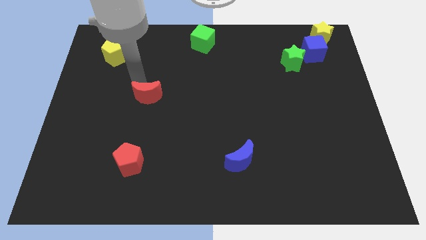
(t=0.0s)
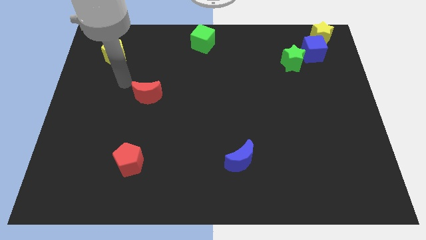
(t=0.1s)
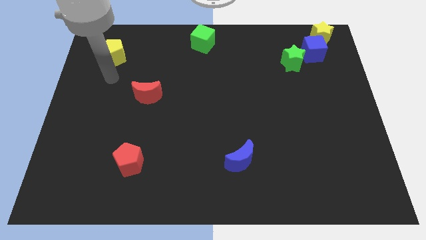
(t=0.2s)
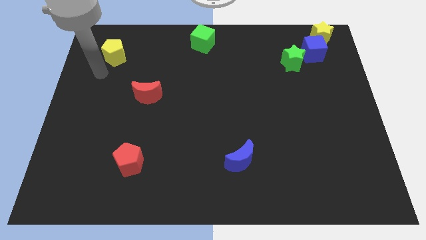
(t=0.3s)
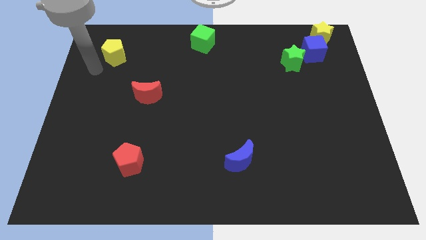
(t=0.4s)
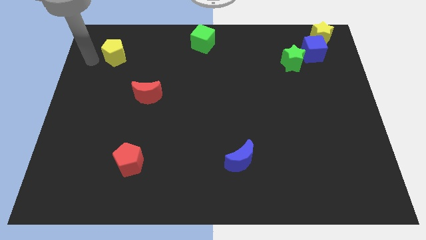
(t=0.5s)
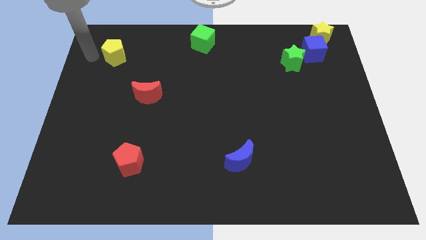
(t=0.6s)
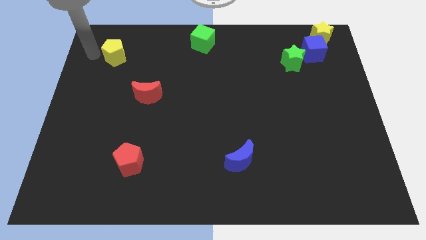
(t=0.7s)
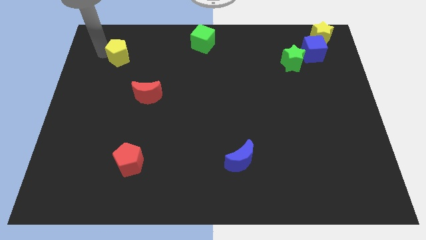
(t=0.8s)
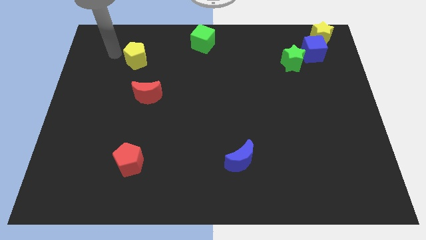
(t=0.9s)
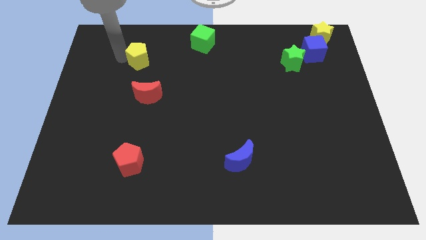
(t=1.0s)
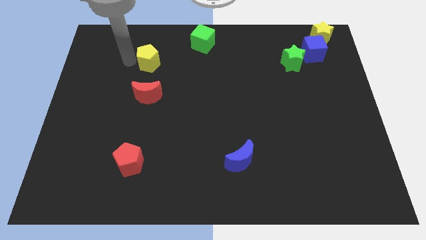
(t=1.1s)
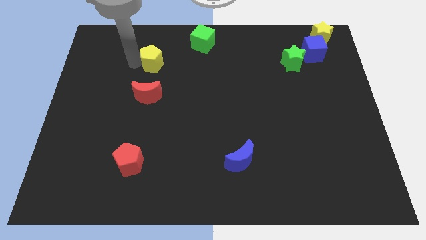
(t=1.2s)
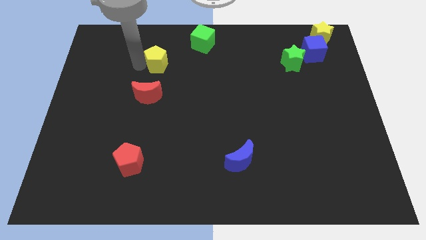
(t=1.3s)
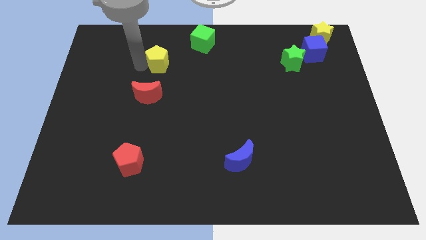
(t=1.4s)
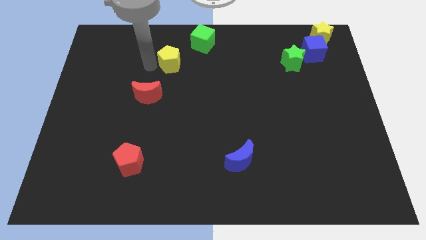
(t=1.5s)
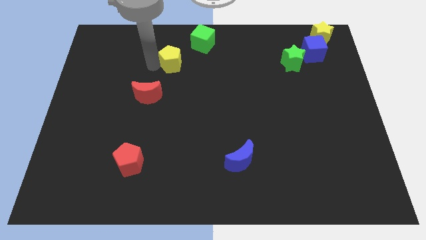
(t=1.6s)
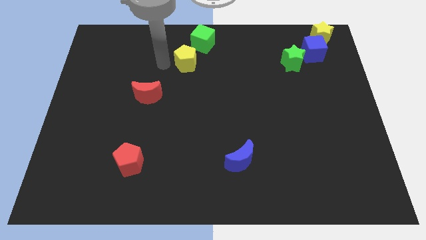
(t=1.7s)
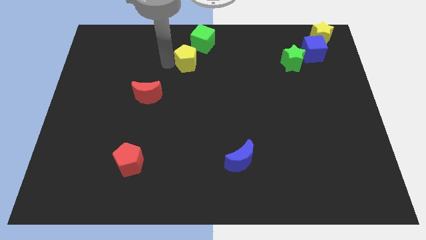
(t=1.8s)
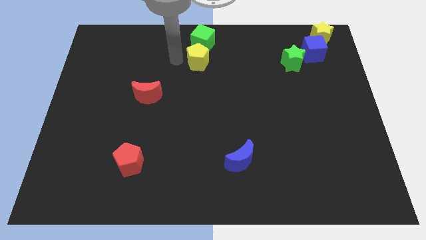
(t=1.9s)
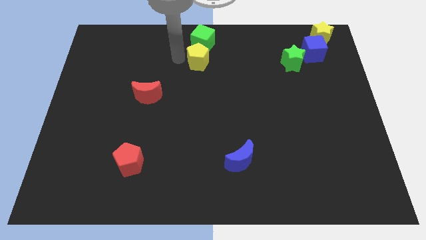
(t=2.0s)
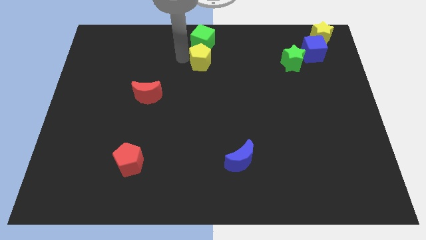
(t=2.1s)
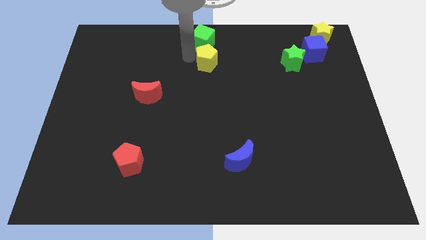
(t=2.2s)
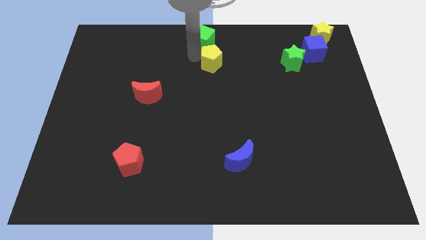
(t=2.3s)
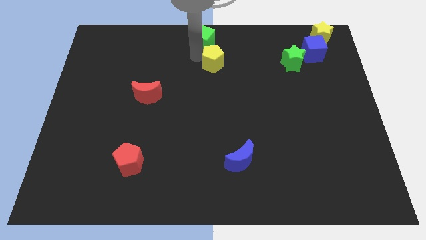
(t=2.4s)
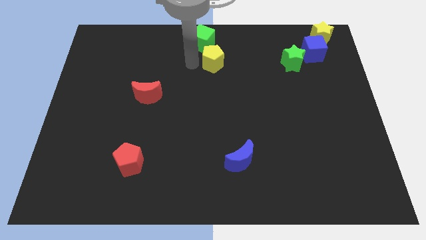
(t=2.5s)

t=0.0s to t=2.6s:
push yellow pentagon below green cube

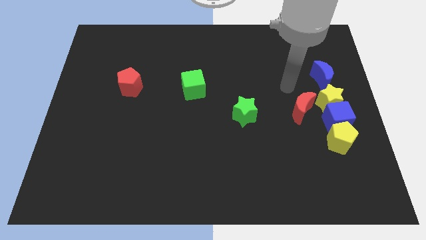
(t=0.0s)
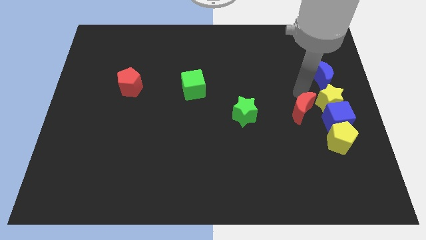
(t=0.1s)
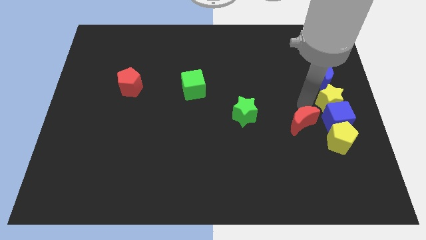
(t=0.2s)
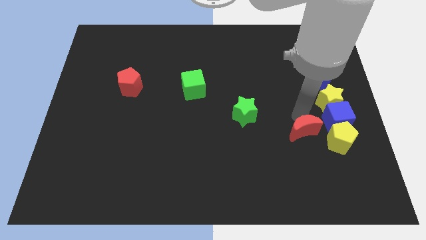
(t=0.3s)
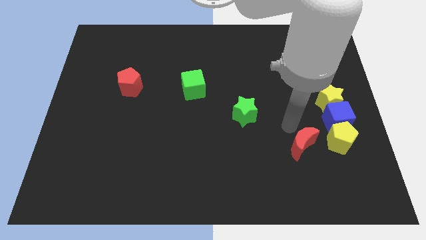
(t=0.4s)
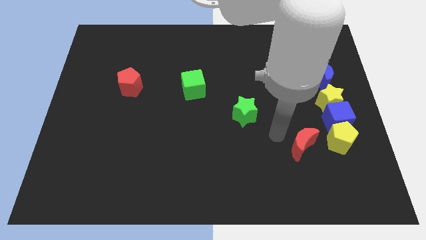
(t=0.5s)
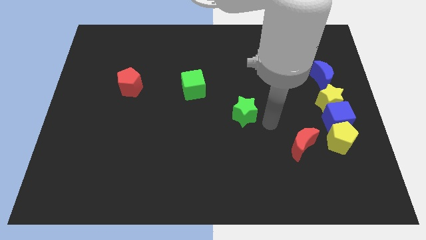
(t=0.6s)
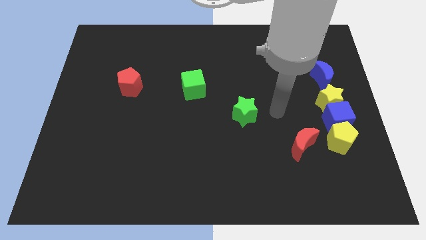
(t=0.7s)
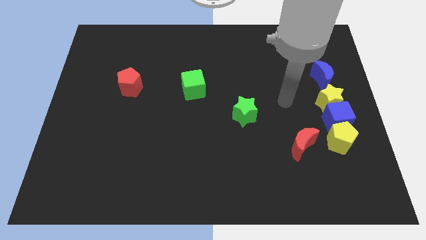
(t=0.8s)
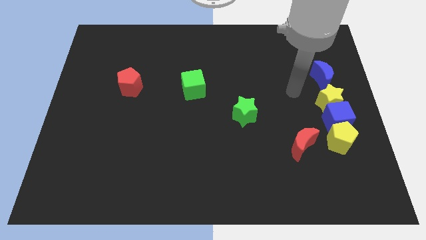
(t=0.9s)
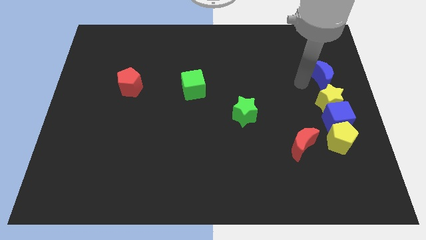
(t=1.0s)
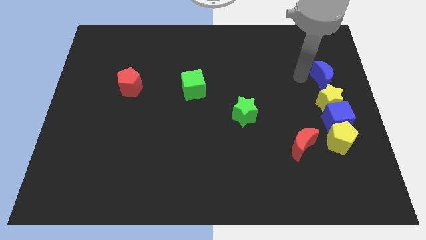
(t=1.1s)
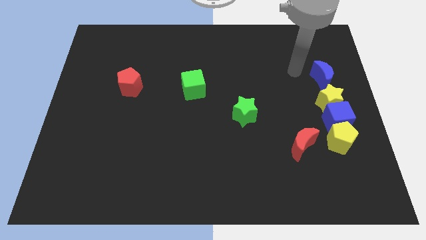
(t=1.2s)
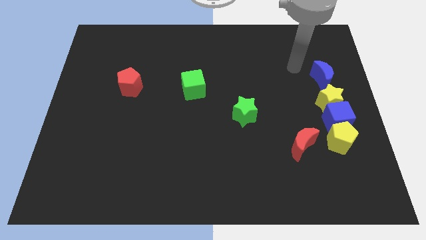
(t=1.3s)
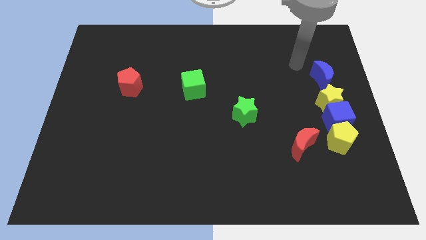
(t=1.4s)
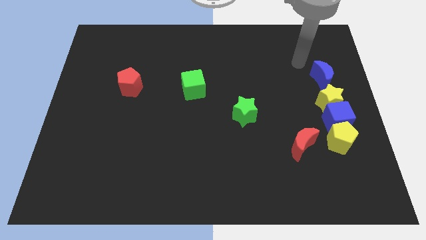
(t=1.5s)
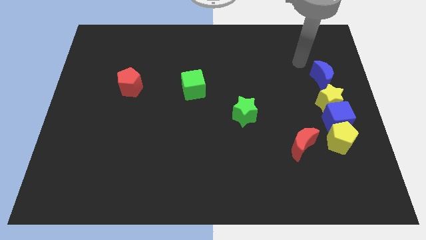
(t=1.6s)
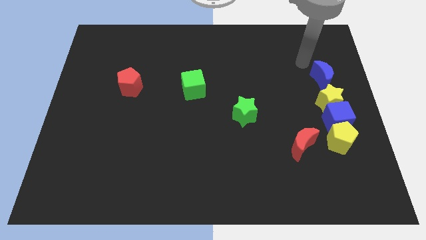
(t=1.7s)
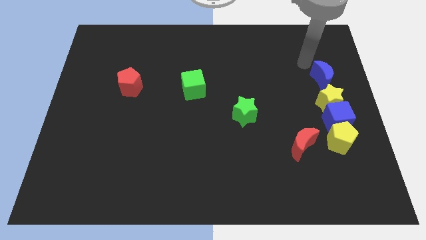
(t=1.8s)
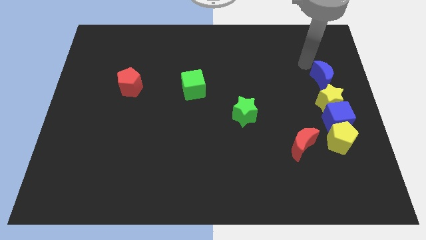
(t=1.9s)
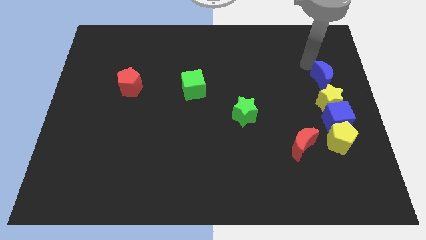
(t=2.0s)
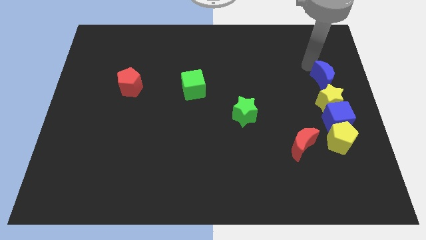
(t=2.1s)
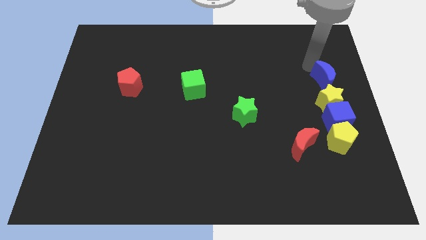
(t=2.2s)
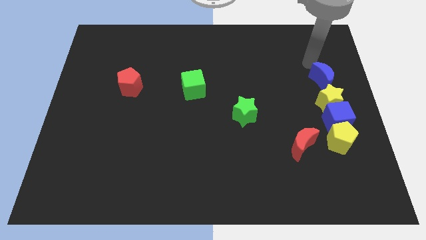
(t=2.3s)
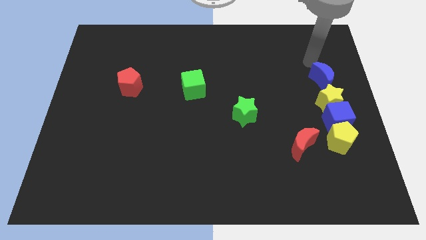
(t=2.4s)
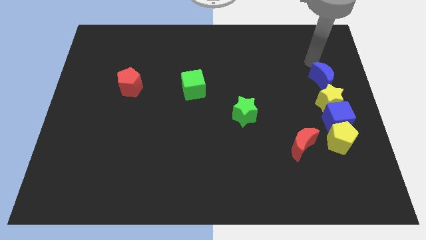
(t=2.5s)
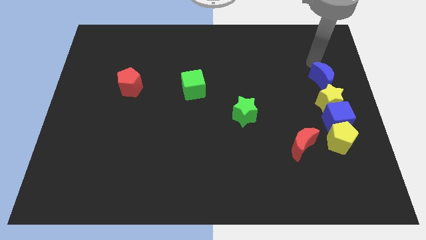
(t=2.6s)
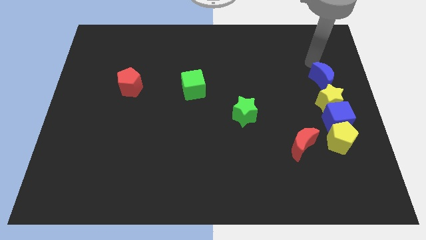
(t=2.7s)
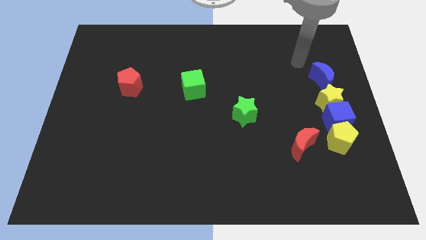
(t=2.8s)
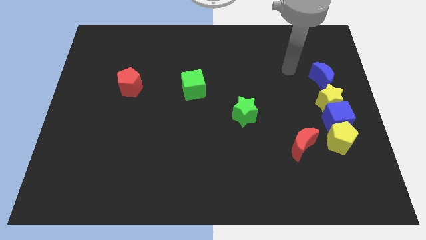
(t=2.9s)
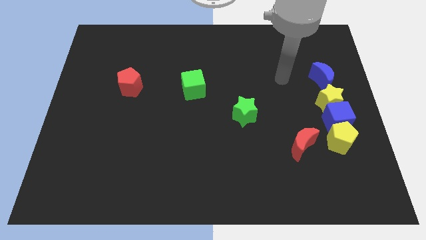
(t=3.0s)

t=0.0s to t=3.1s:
move red crescent towards the bottom side of the board

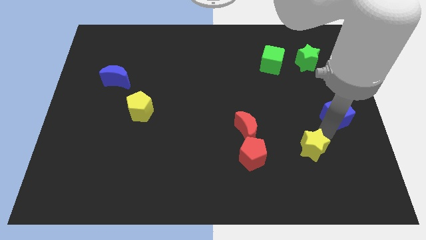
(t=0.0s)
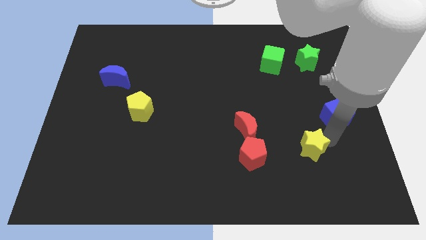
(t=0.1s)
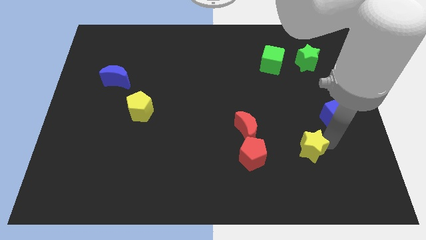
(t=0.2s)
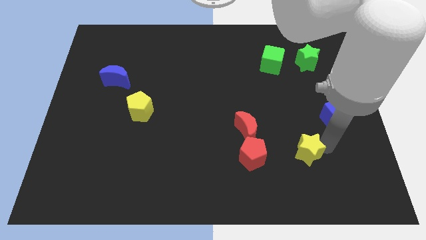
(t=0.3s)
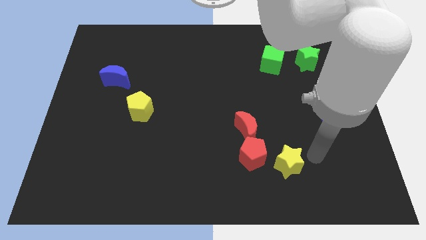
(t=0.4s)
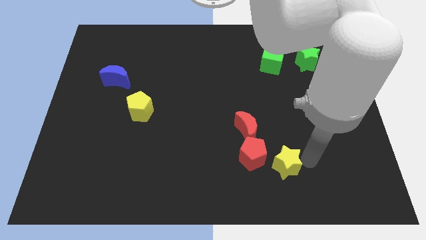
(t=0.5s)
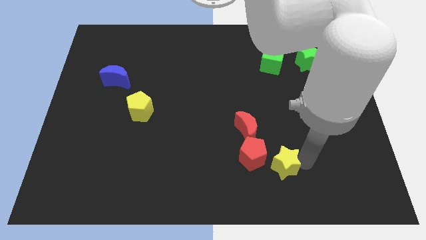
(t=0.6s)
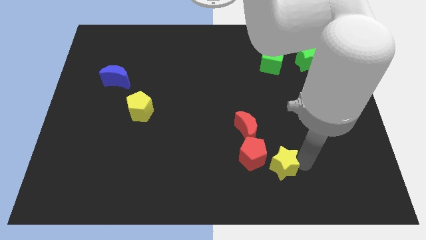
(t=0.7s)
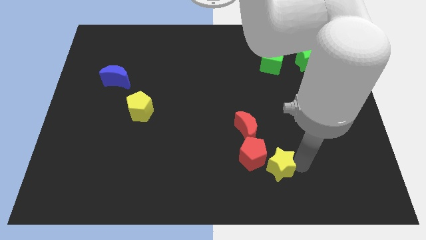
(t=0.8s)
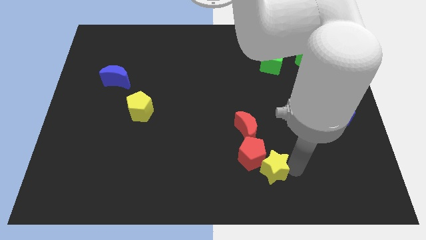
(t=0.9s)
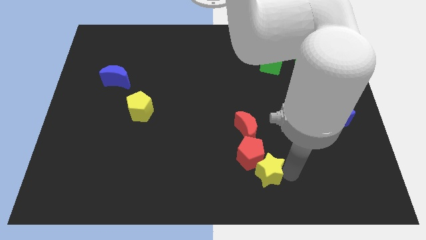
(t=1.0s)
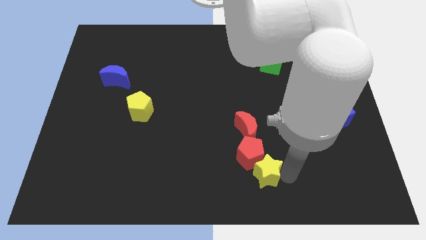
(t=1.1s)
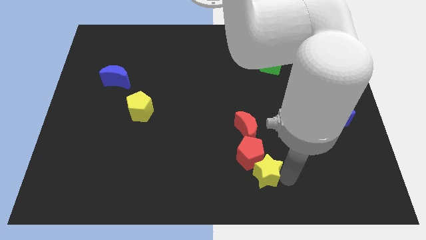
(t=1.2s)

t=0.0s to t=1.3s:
push the yellow star slightly downwards

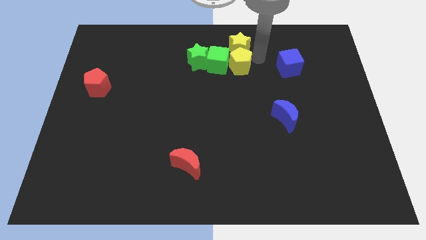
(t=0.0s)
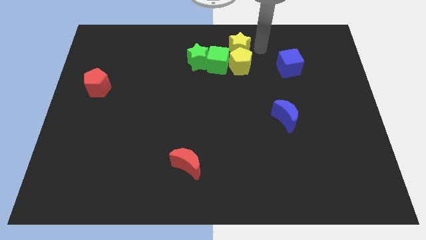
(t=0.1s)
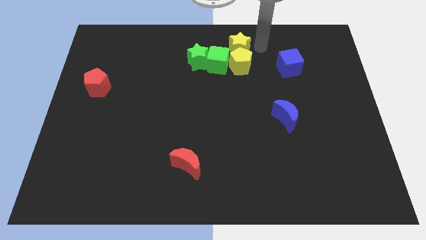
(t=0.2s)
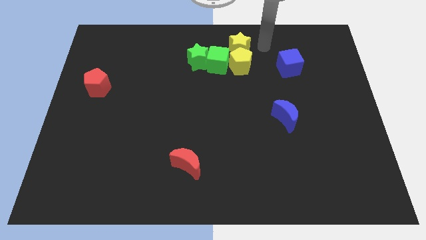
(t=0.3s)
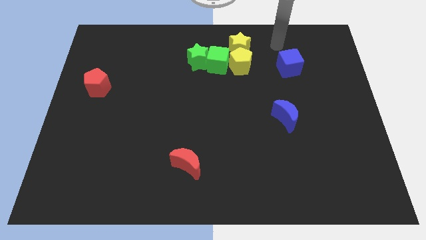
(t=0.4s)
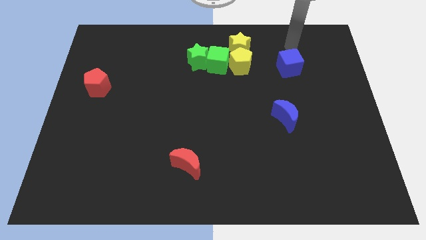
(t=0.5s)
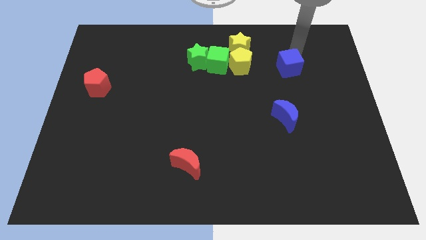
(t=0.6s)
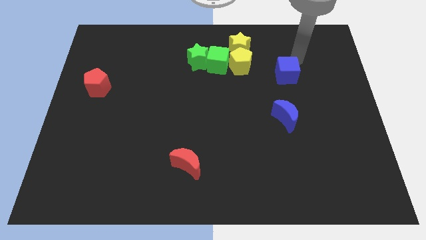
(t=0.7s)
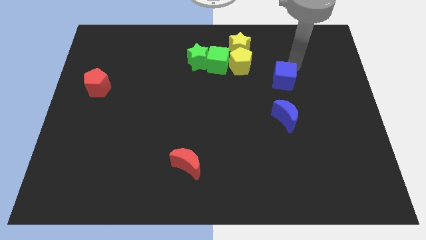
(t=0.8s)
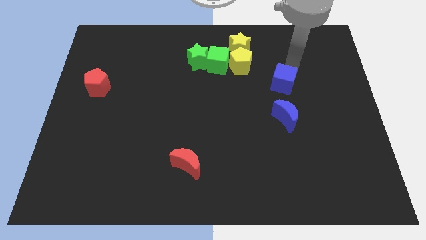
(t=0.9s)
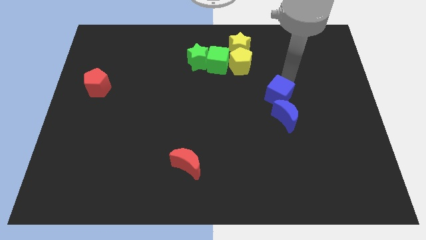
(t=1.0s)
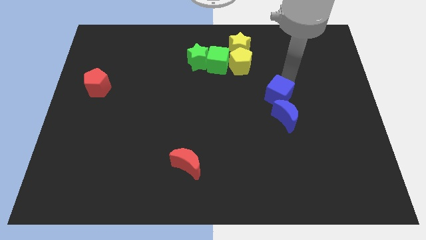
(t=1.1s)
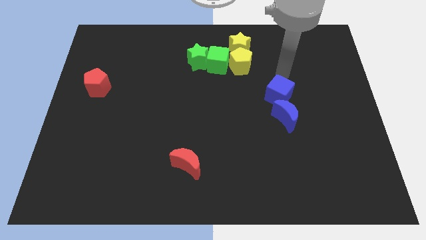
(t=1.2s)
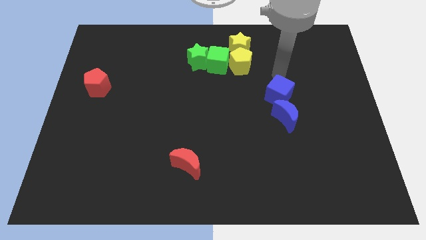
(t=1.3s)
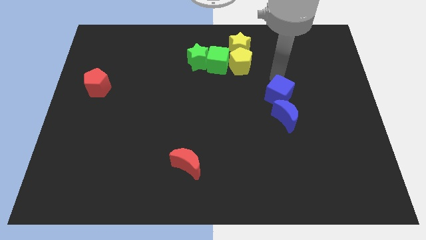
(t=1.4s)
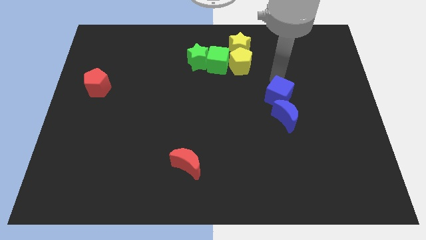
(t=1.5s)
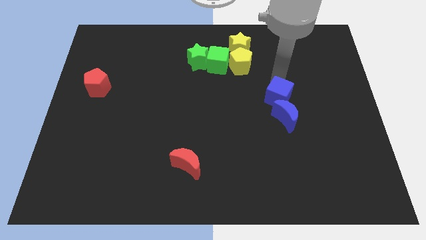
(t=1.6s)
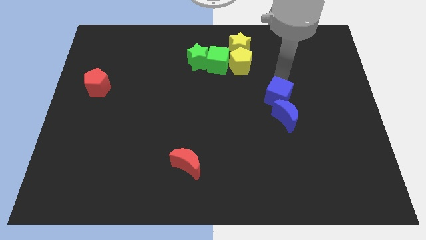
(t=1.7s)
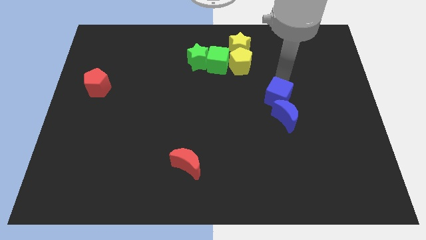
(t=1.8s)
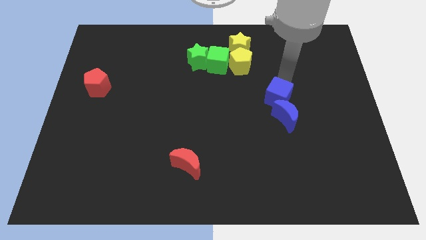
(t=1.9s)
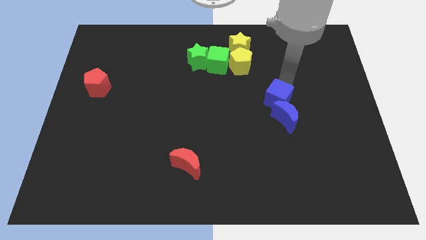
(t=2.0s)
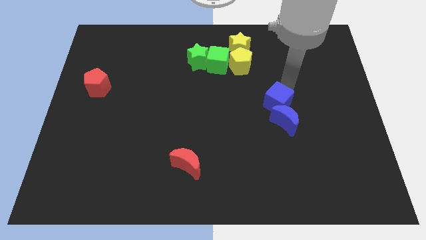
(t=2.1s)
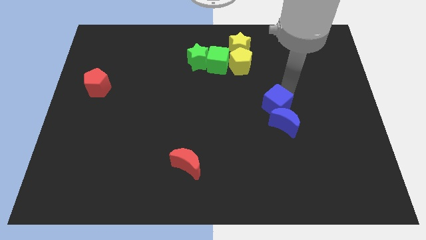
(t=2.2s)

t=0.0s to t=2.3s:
put the blue cube on top into blue moon
